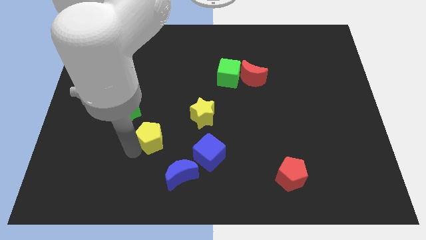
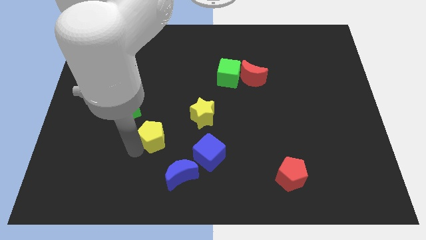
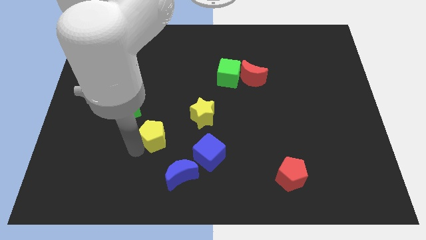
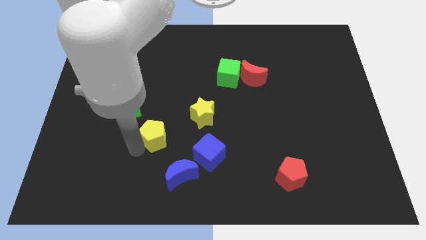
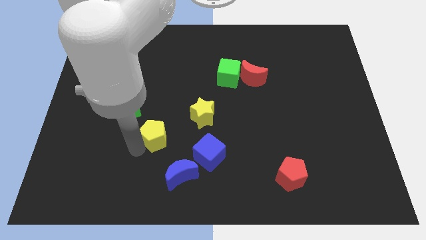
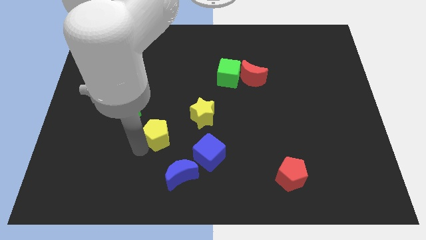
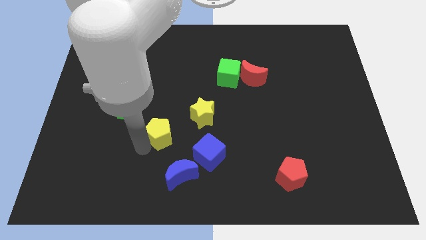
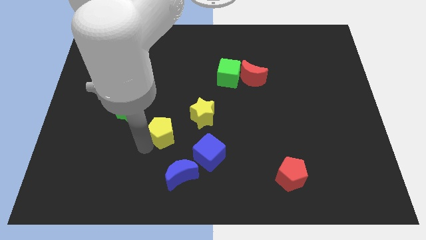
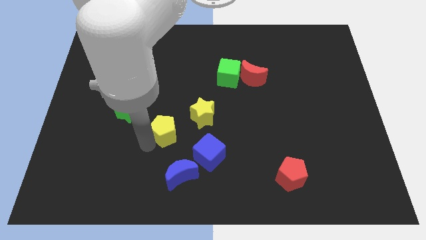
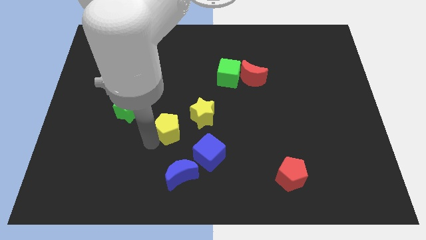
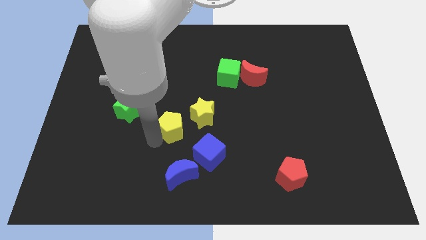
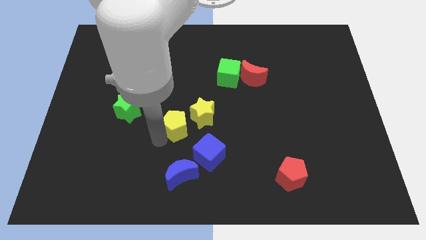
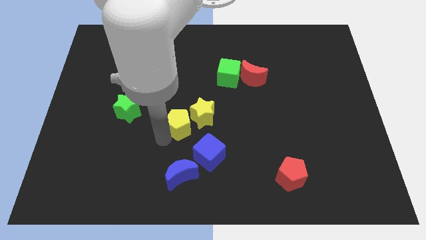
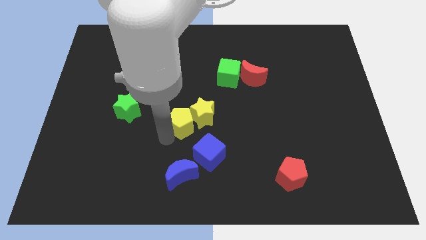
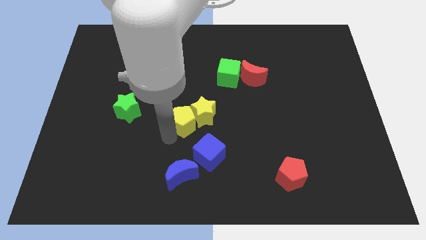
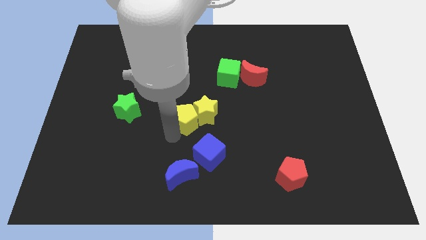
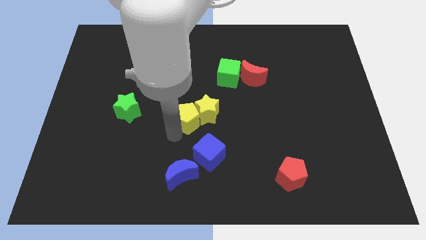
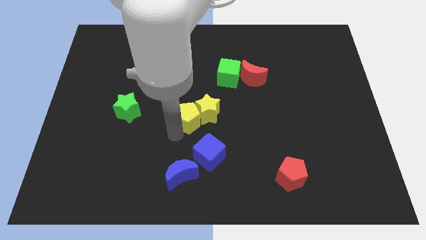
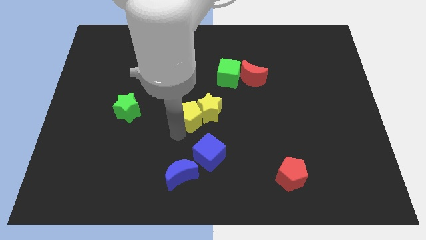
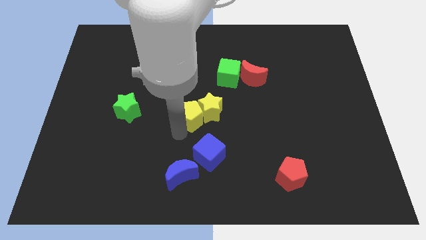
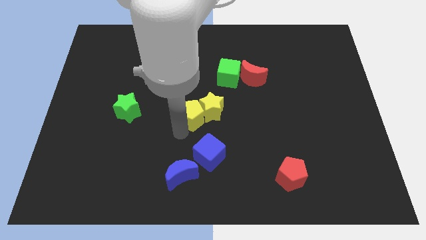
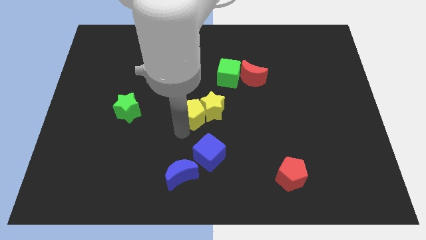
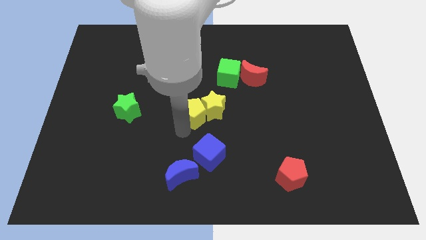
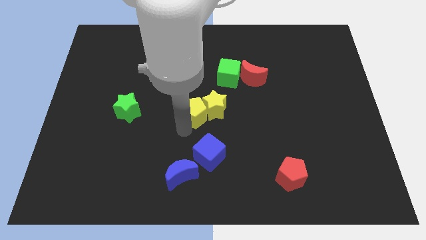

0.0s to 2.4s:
push the yellow pentagon into the yellow star

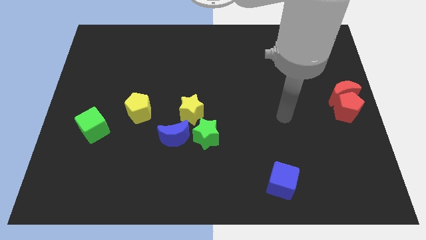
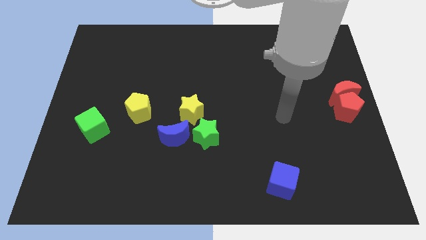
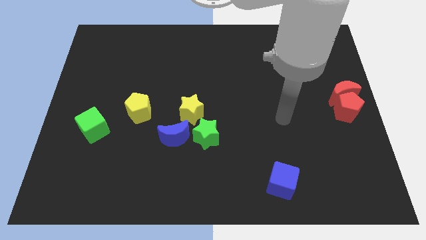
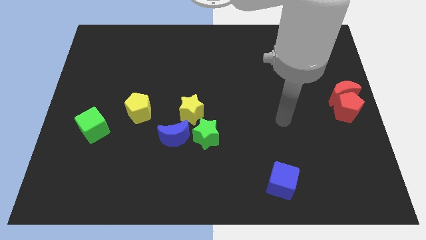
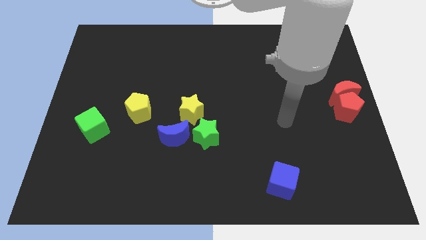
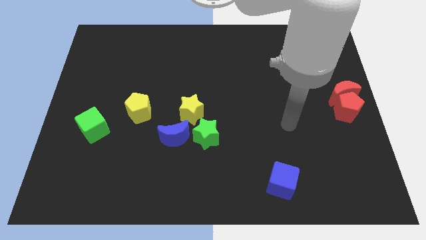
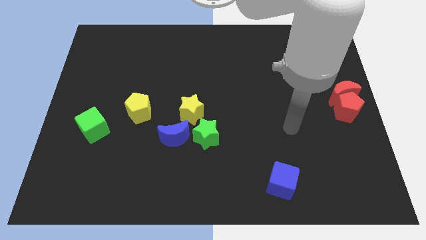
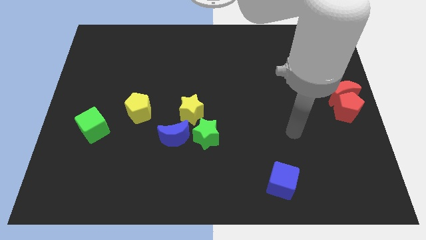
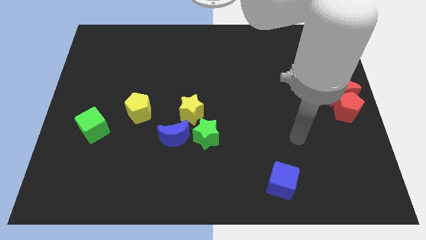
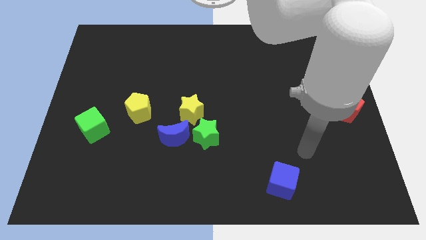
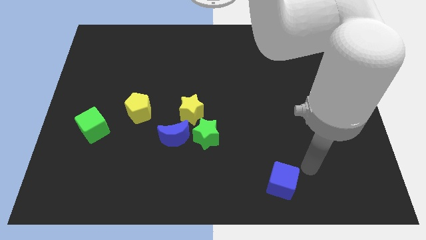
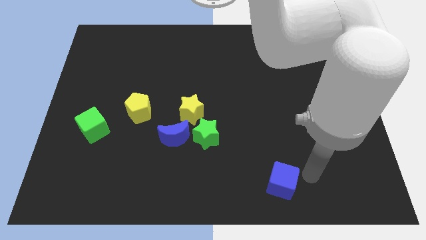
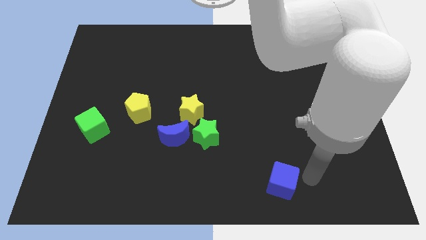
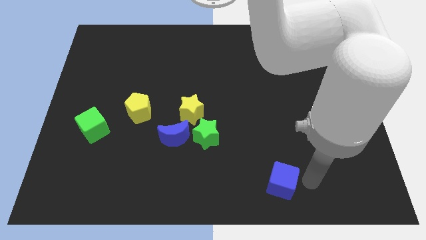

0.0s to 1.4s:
move your arm to the right of the blue cube

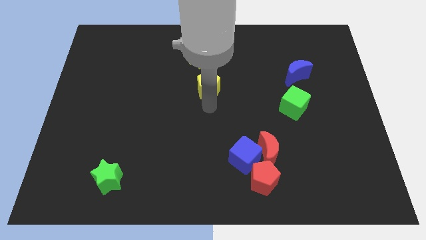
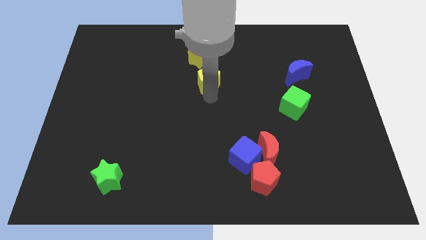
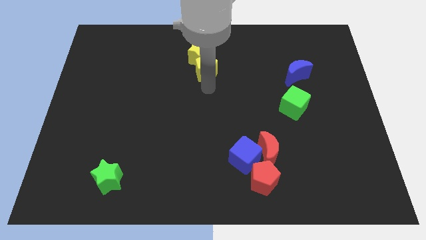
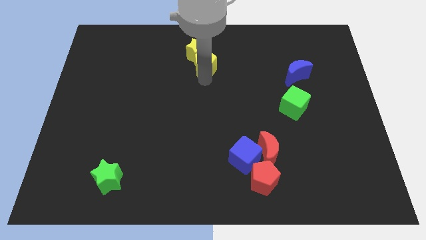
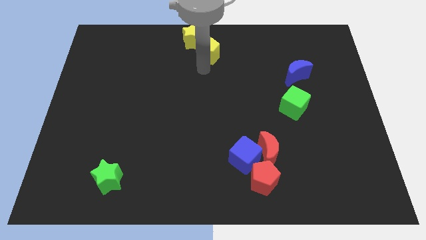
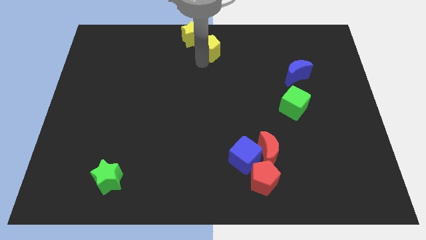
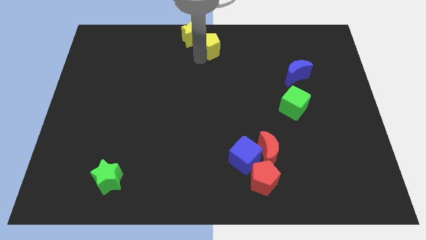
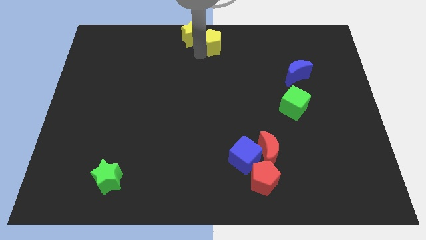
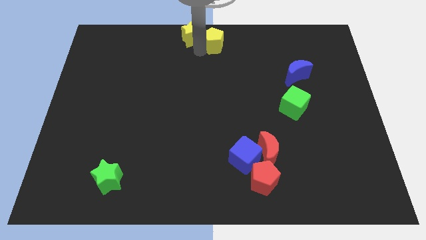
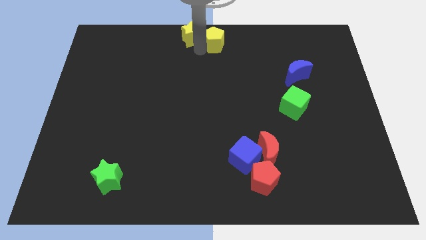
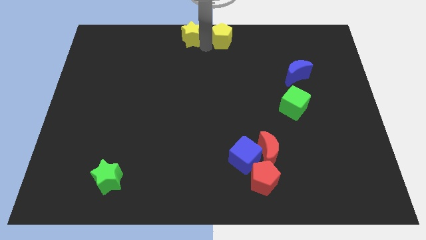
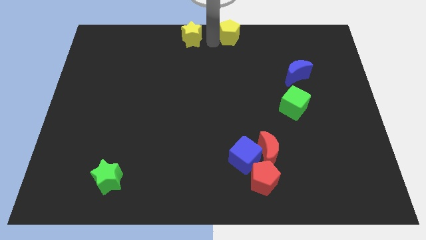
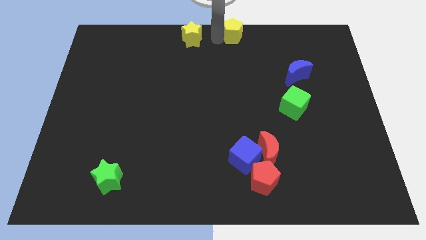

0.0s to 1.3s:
place the yellow pentagon to the right side of the yellow star

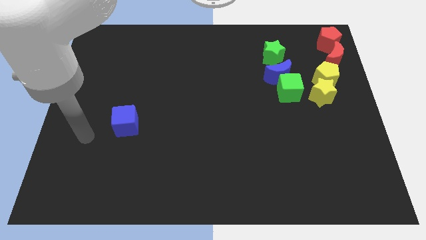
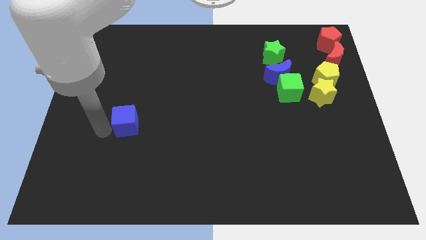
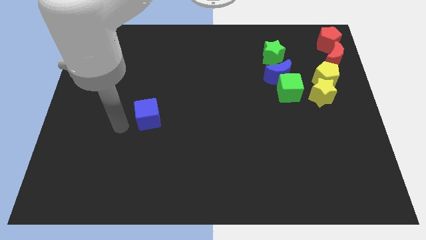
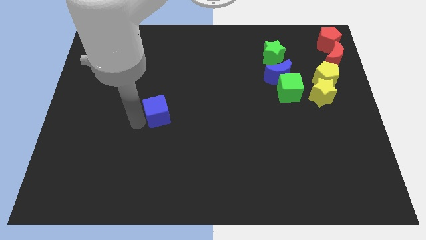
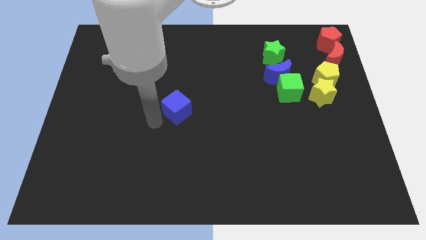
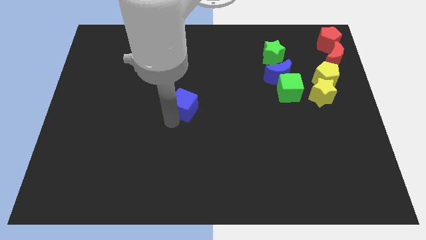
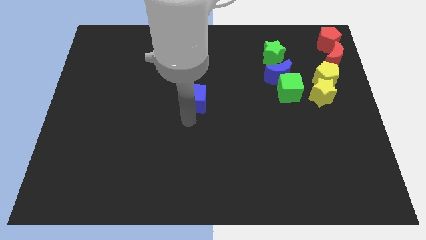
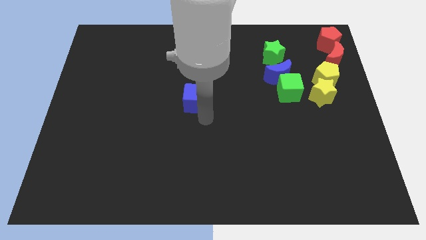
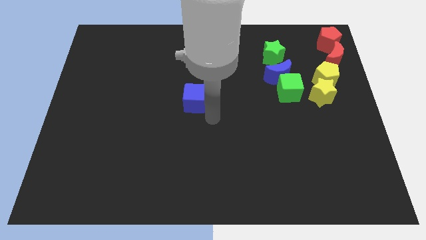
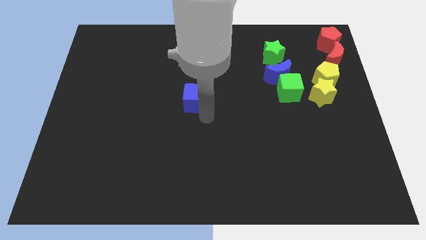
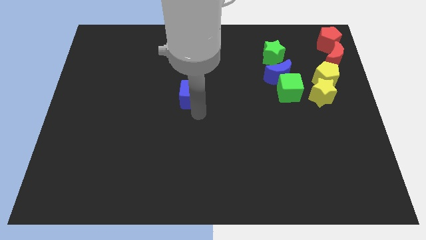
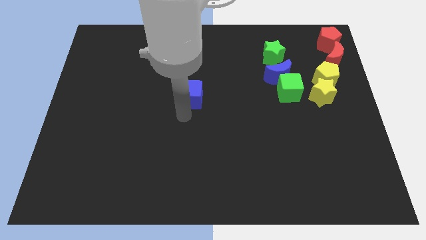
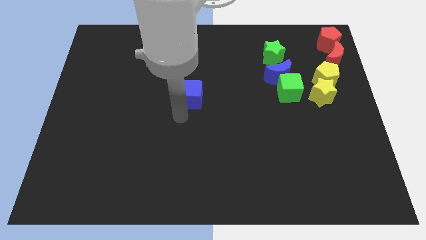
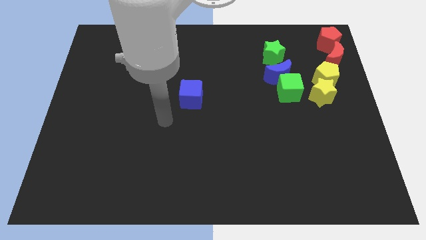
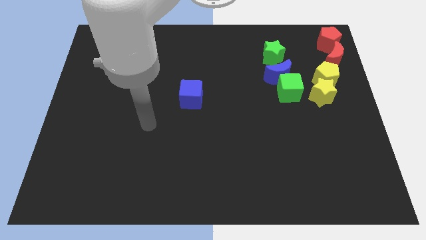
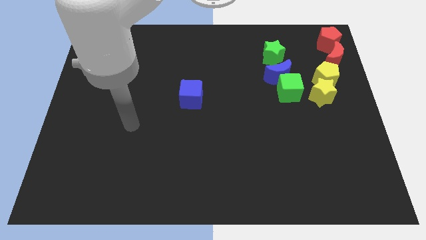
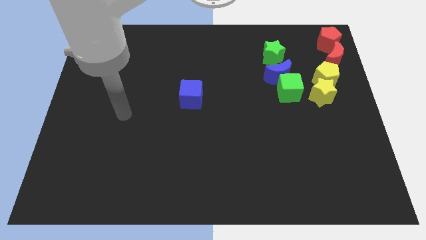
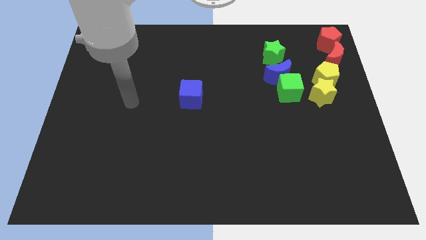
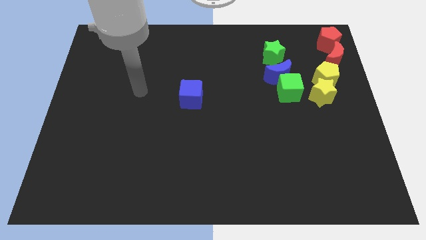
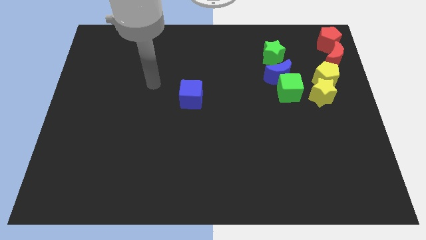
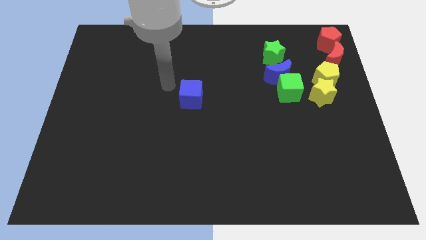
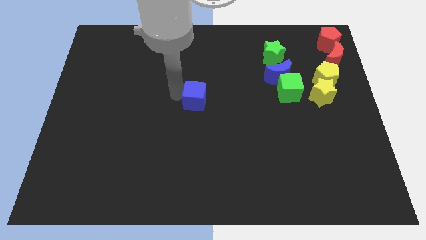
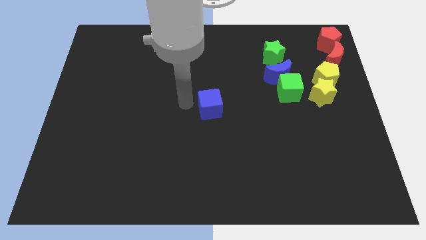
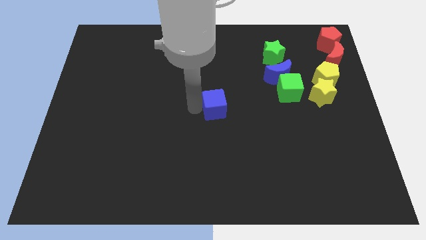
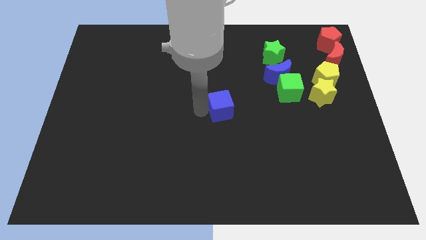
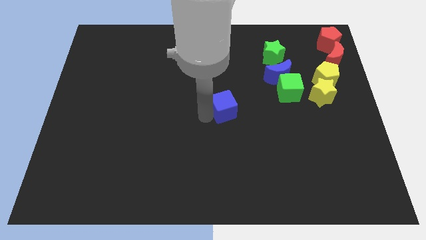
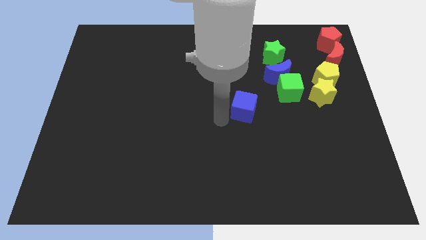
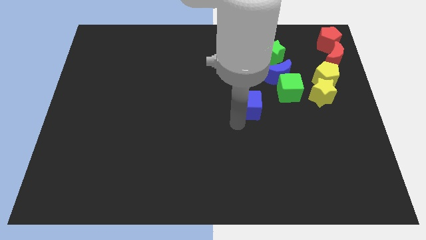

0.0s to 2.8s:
push the blue cube towards the vertical line of blocks

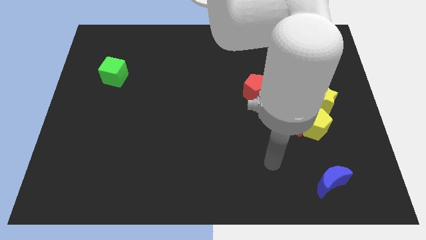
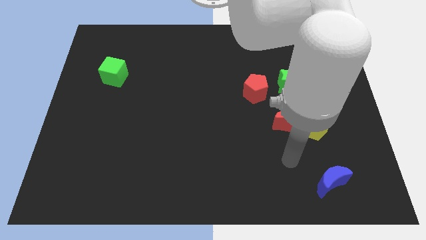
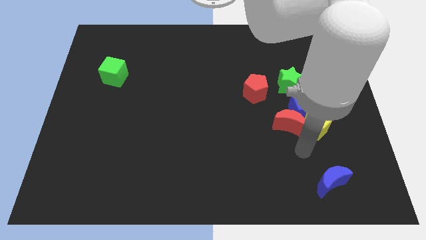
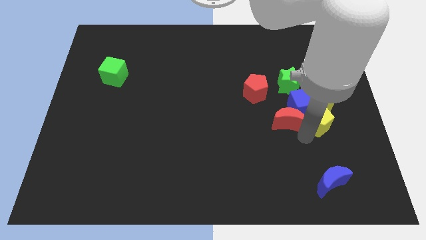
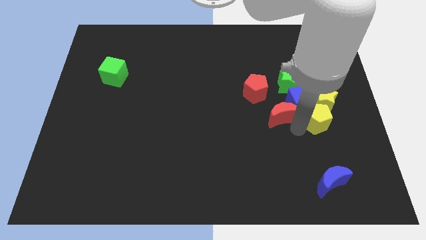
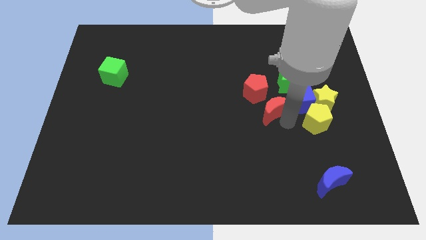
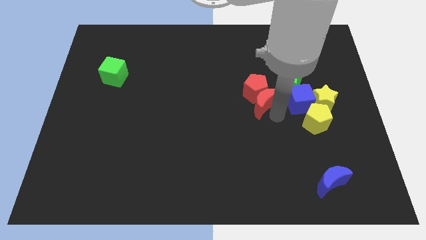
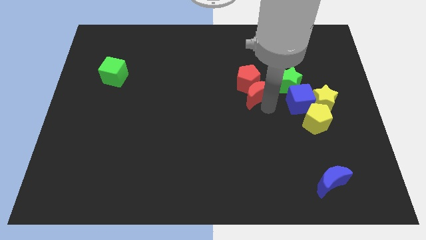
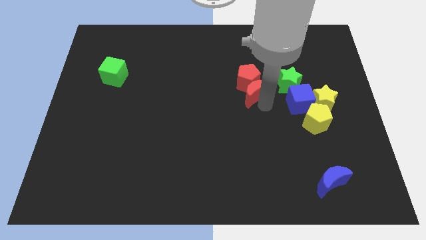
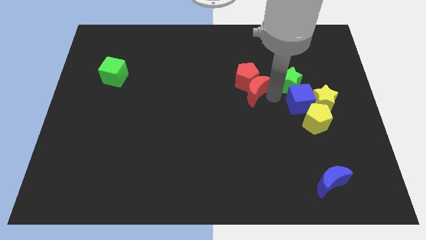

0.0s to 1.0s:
push red crescent into red pentagon
